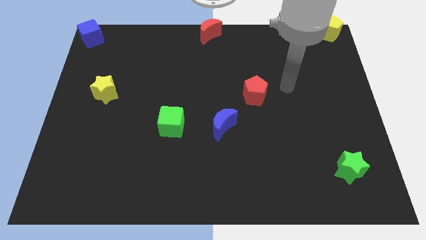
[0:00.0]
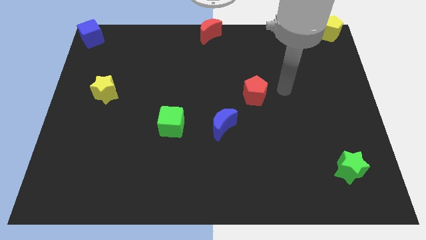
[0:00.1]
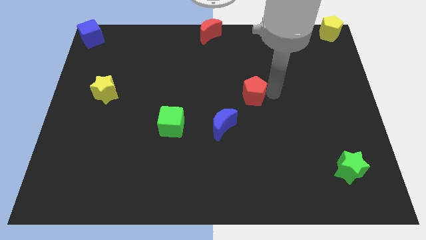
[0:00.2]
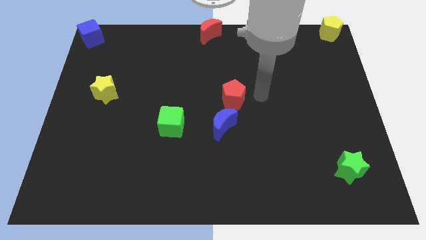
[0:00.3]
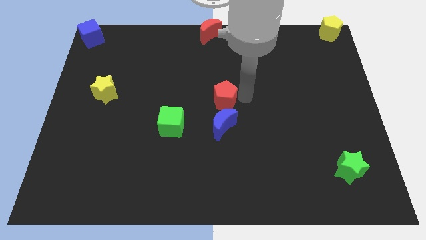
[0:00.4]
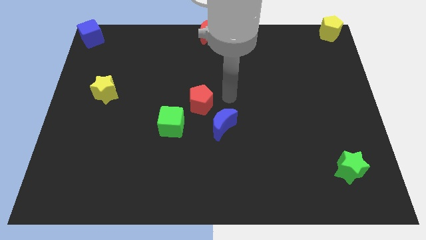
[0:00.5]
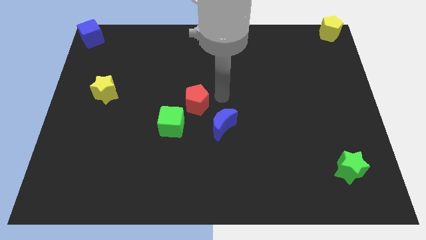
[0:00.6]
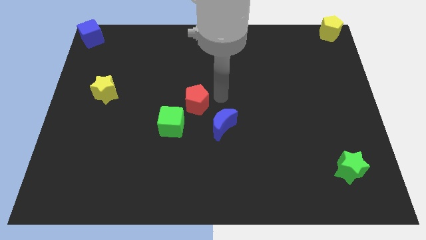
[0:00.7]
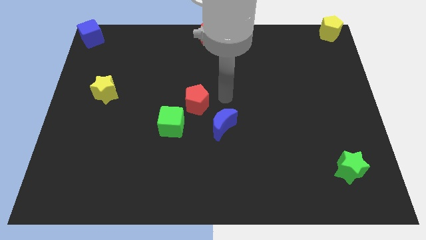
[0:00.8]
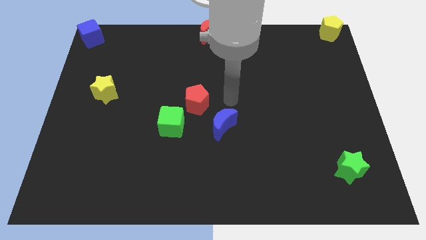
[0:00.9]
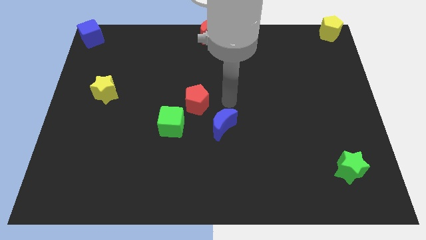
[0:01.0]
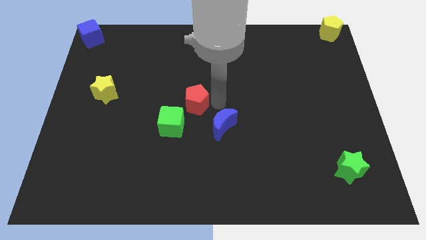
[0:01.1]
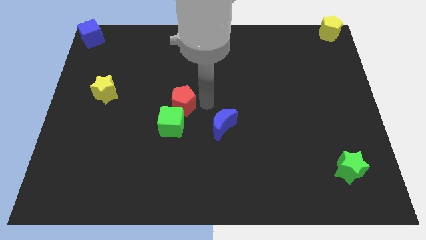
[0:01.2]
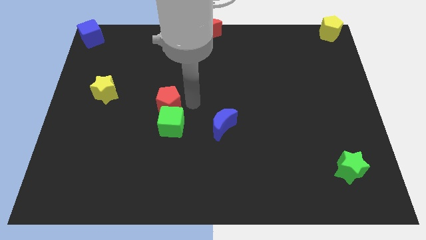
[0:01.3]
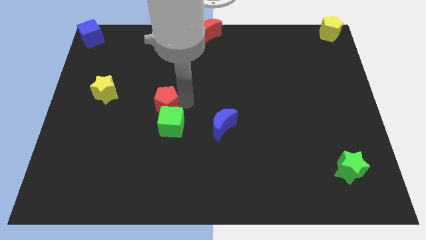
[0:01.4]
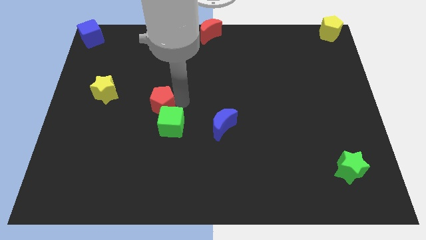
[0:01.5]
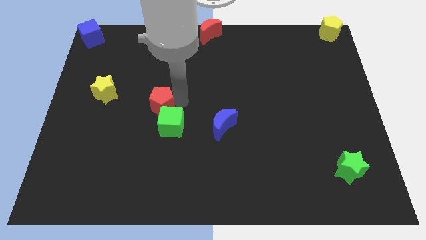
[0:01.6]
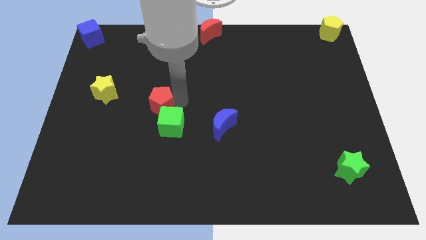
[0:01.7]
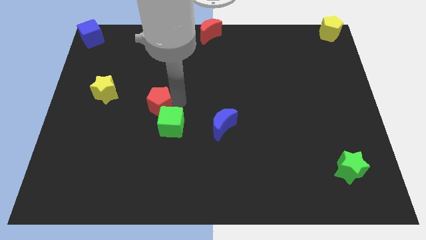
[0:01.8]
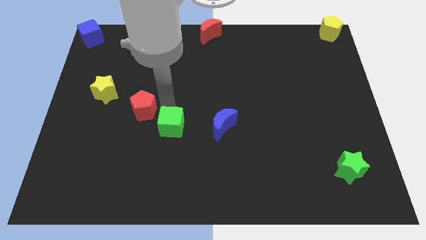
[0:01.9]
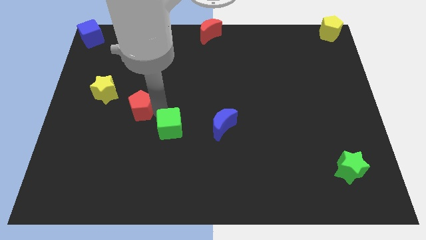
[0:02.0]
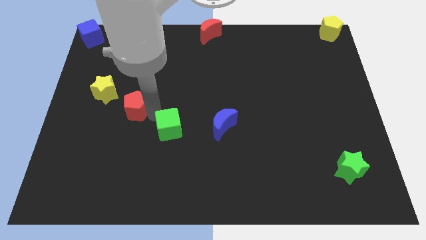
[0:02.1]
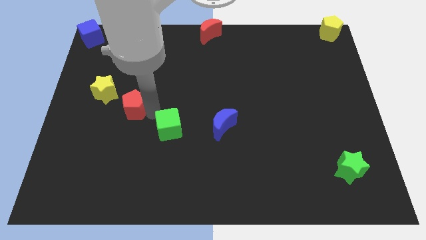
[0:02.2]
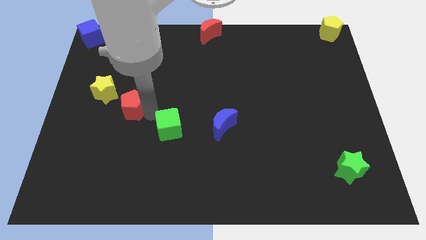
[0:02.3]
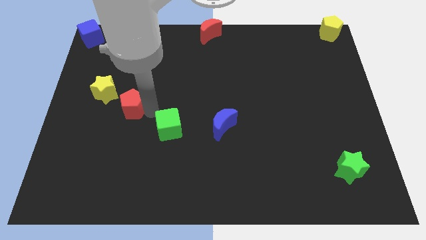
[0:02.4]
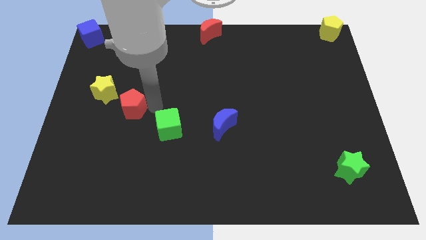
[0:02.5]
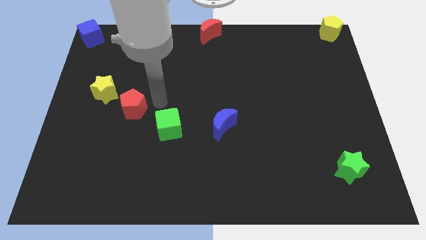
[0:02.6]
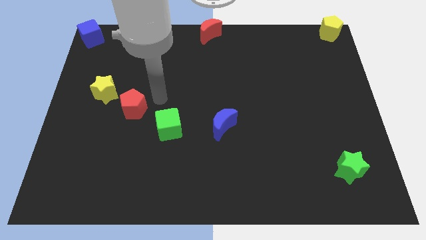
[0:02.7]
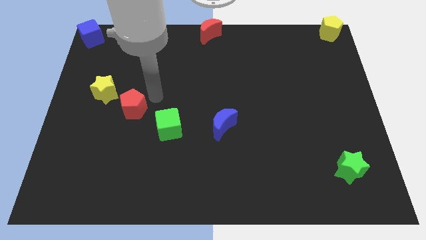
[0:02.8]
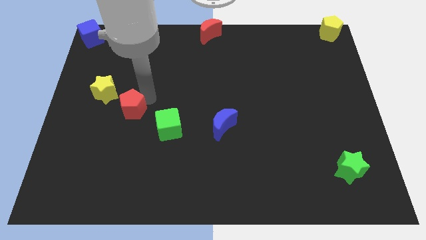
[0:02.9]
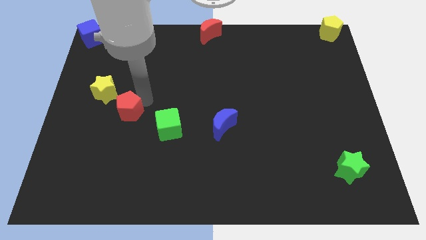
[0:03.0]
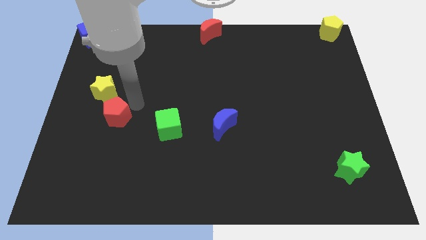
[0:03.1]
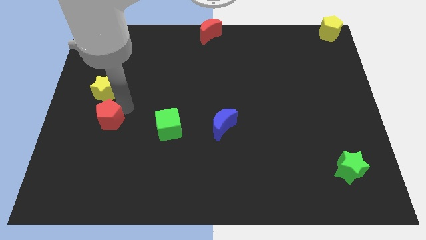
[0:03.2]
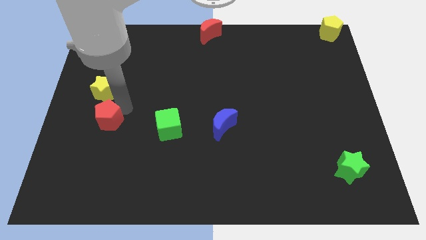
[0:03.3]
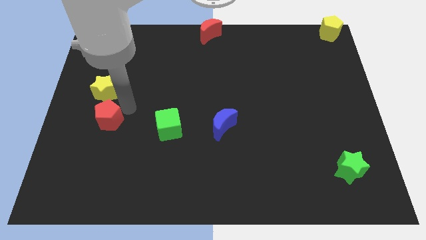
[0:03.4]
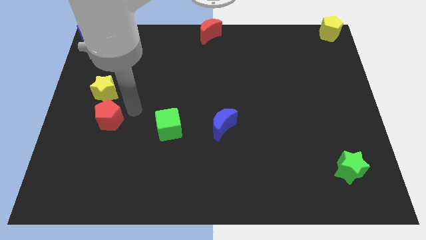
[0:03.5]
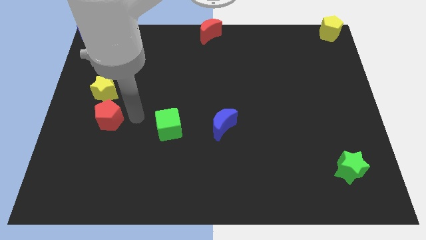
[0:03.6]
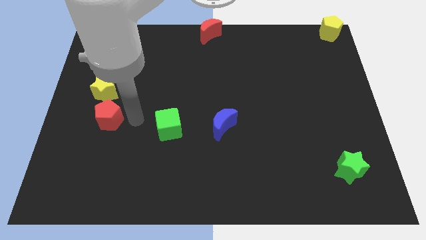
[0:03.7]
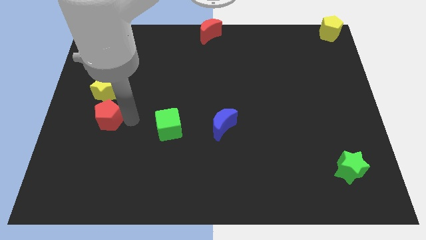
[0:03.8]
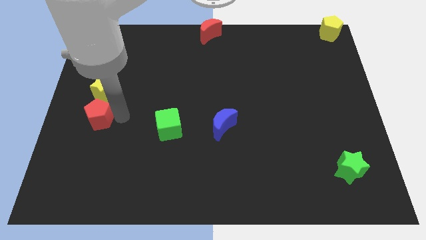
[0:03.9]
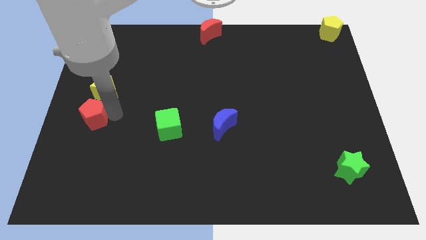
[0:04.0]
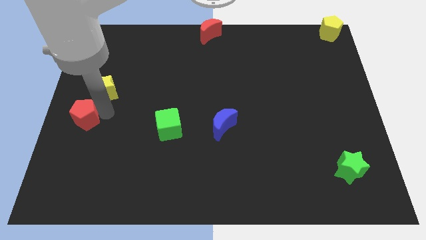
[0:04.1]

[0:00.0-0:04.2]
place the red pentagon below the yellow star

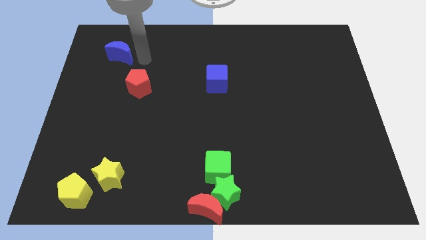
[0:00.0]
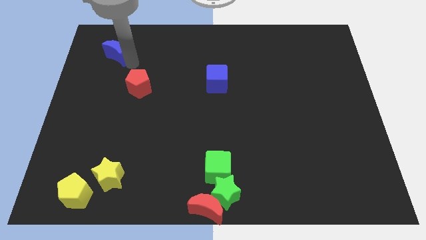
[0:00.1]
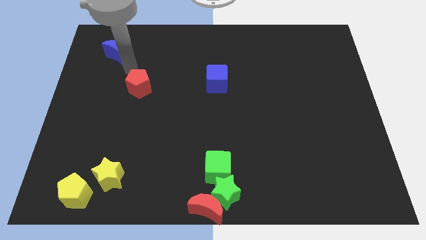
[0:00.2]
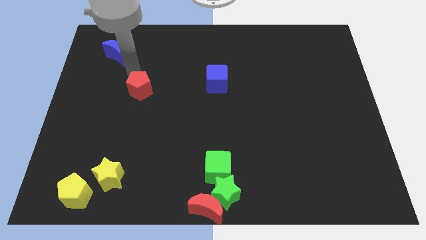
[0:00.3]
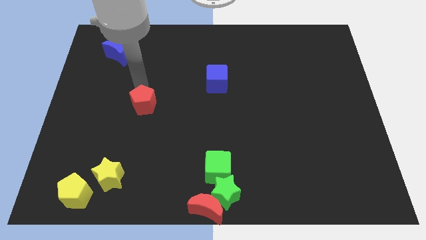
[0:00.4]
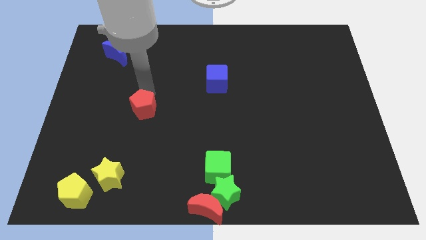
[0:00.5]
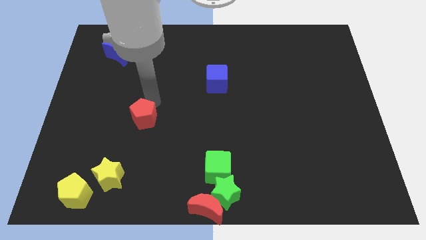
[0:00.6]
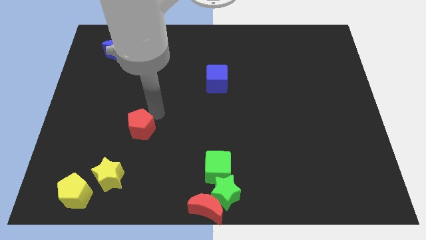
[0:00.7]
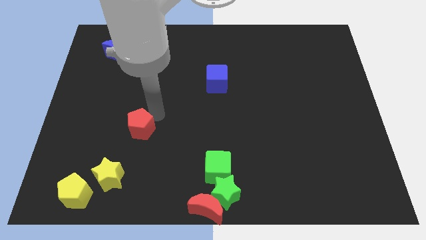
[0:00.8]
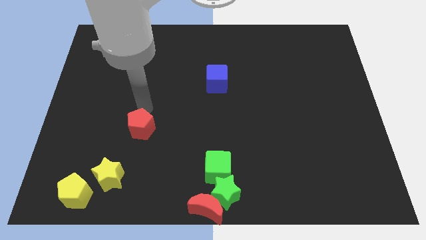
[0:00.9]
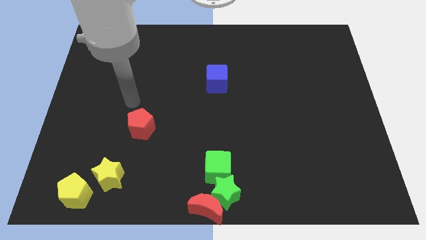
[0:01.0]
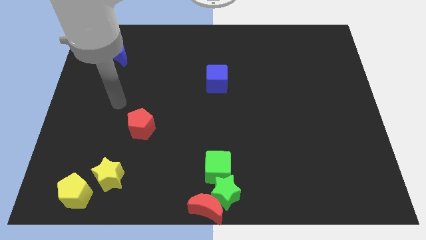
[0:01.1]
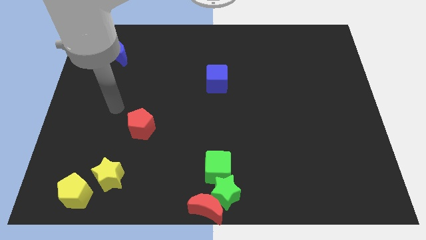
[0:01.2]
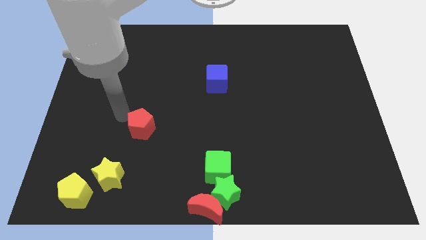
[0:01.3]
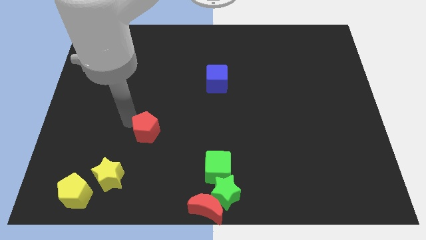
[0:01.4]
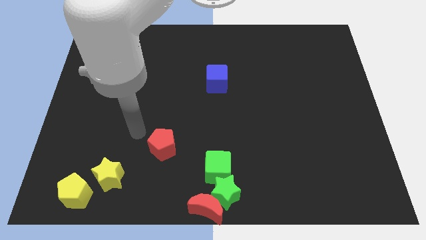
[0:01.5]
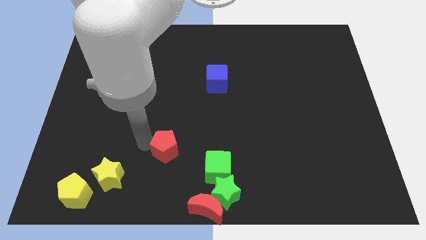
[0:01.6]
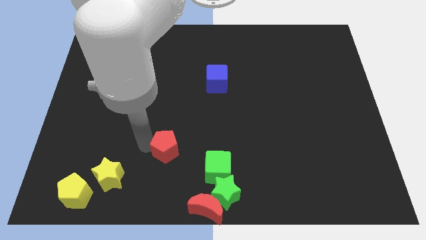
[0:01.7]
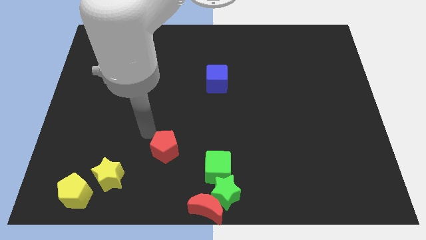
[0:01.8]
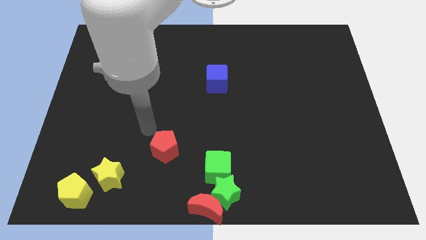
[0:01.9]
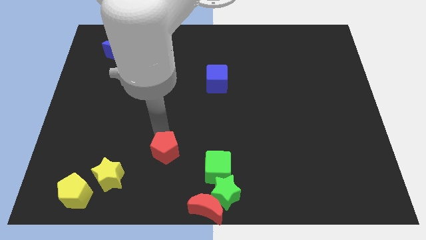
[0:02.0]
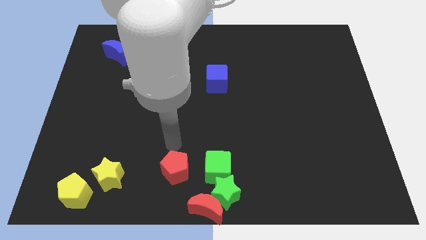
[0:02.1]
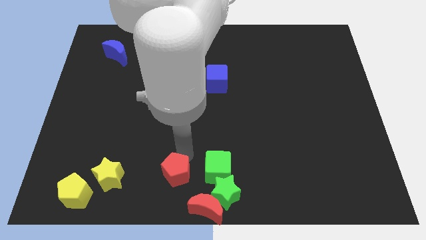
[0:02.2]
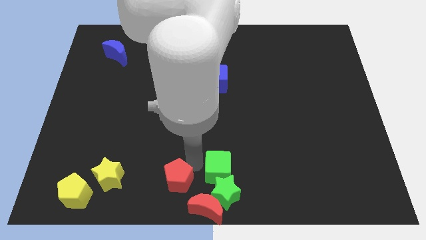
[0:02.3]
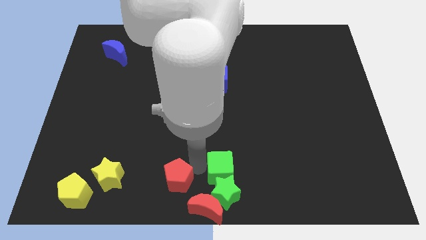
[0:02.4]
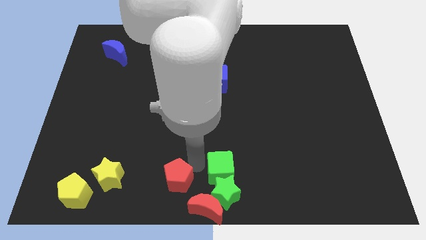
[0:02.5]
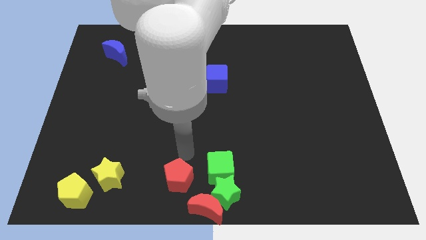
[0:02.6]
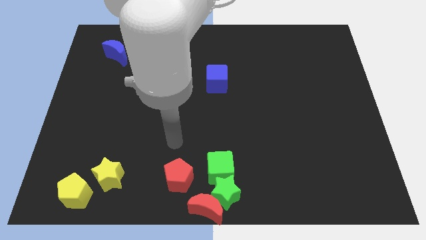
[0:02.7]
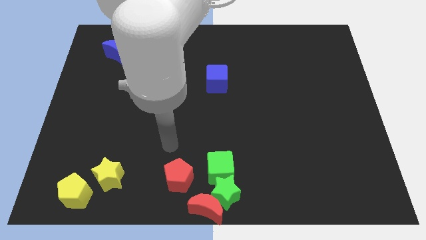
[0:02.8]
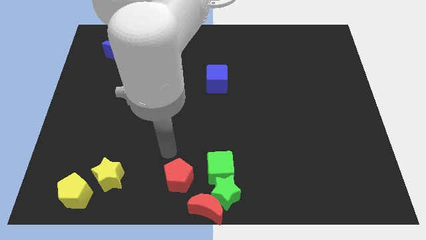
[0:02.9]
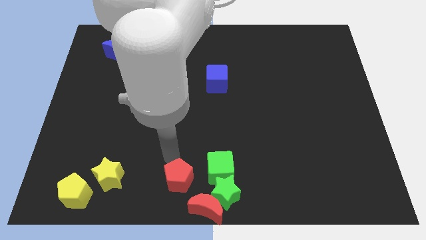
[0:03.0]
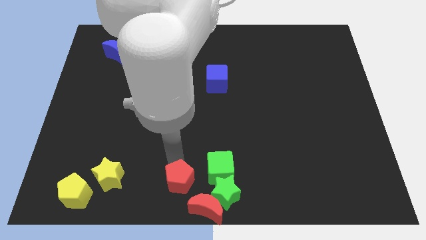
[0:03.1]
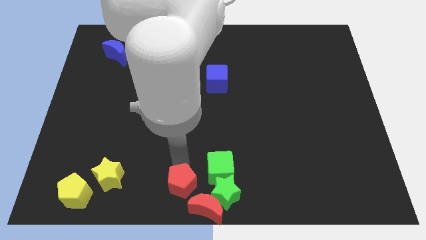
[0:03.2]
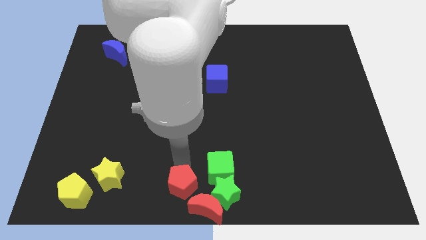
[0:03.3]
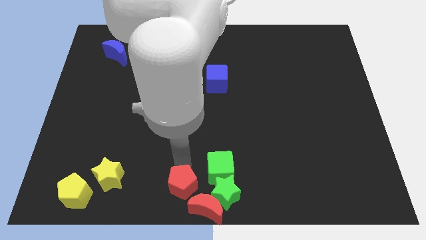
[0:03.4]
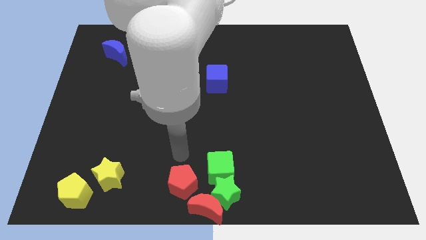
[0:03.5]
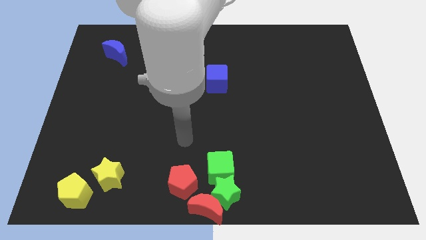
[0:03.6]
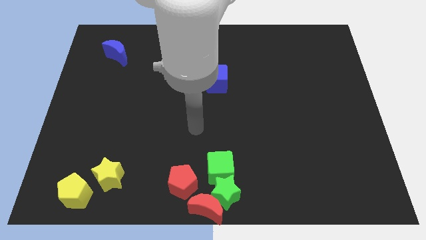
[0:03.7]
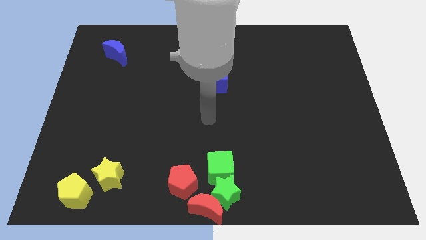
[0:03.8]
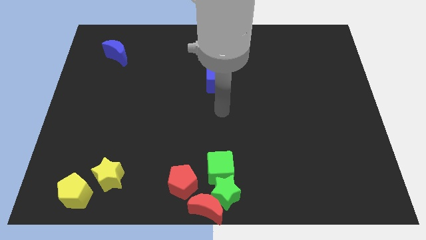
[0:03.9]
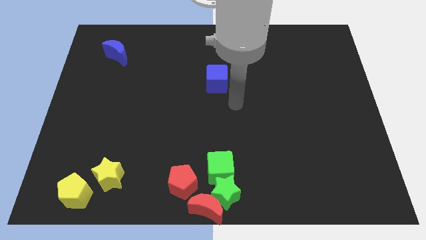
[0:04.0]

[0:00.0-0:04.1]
push red pentagon towards red moon

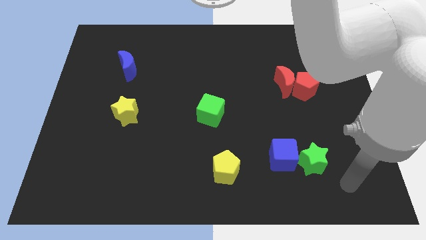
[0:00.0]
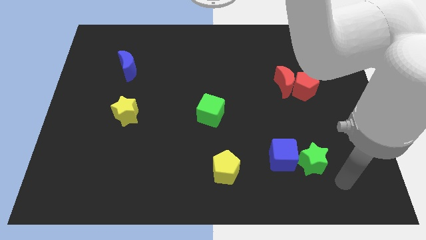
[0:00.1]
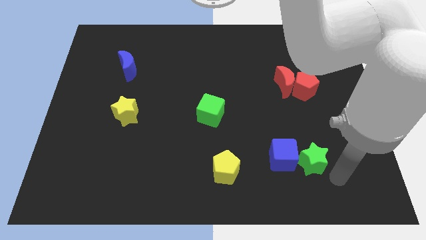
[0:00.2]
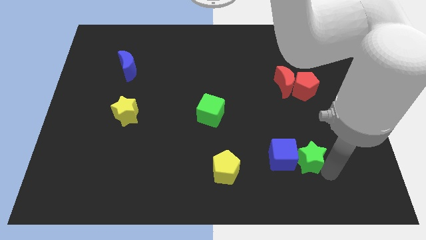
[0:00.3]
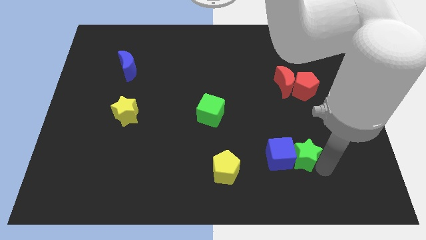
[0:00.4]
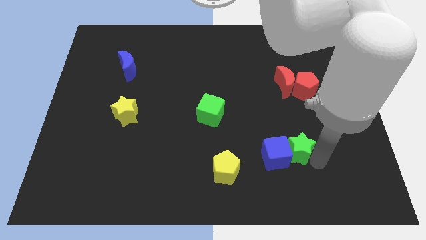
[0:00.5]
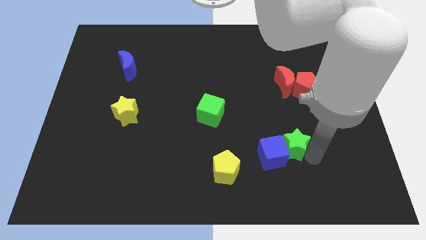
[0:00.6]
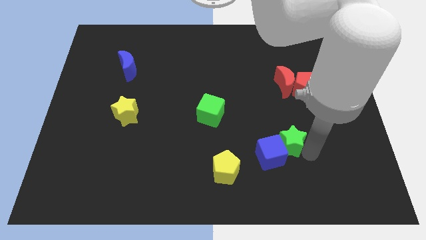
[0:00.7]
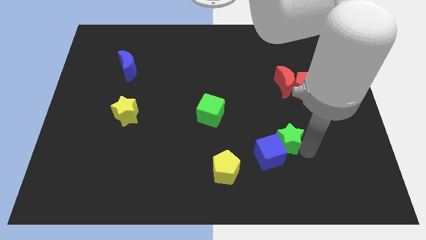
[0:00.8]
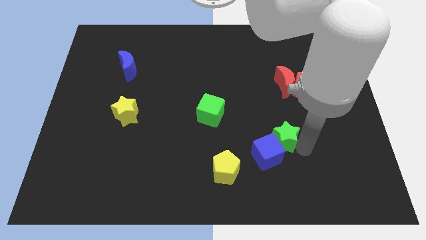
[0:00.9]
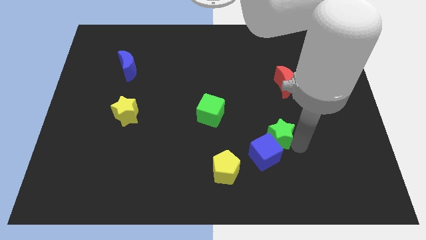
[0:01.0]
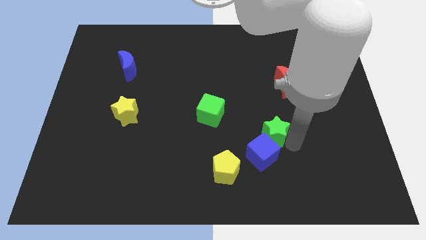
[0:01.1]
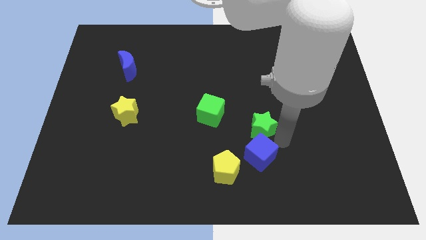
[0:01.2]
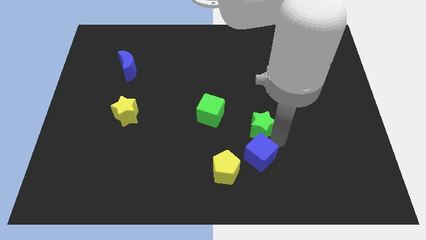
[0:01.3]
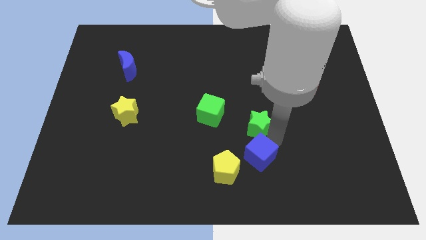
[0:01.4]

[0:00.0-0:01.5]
put the green star above the blue cube
